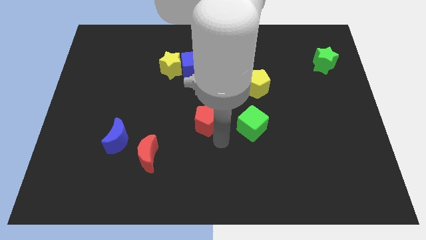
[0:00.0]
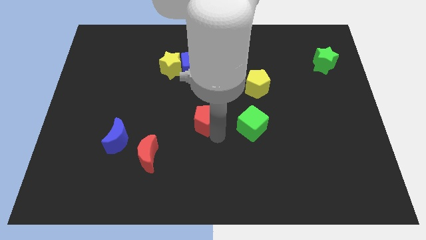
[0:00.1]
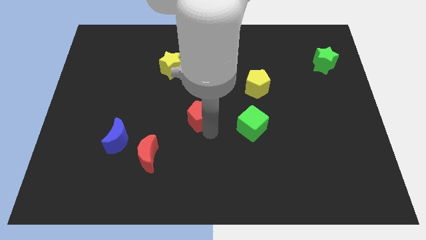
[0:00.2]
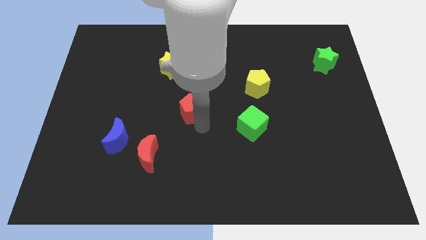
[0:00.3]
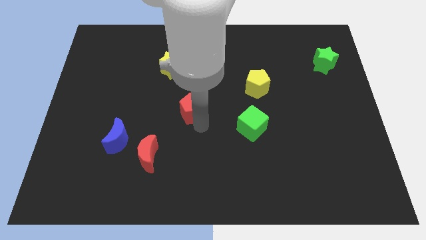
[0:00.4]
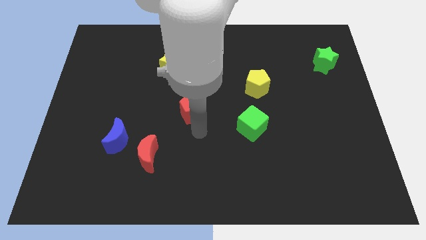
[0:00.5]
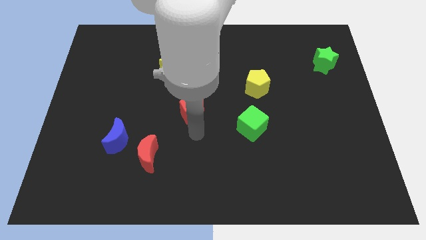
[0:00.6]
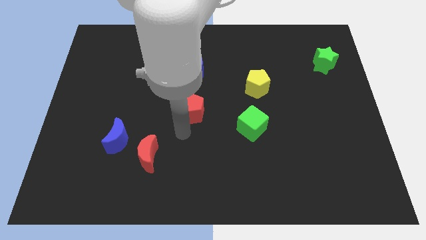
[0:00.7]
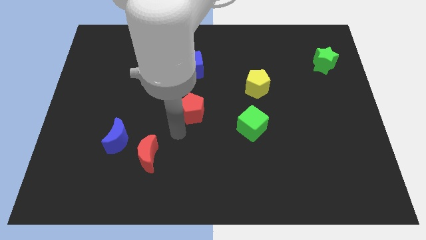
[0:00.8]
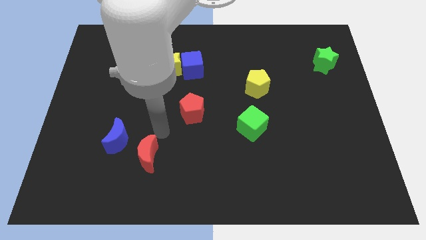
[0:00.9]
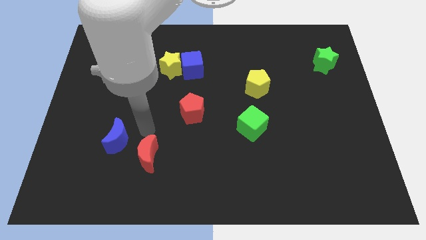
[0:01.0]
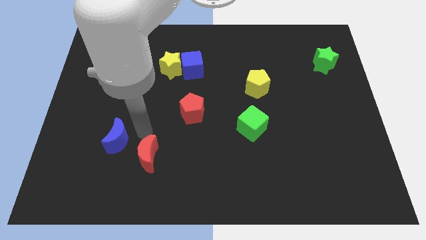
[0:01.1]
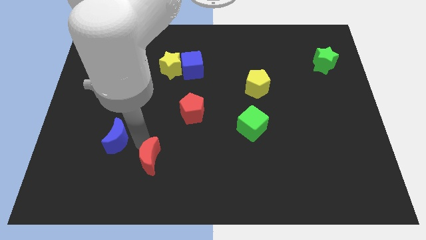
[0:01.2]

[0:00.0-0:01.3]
move your arm towards the red crescent

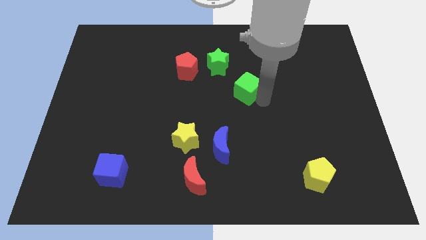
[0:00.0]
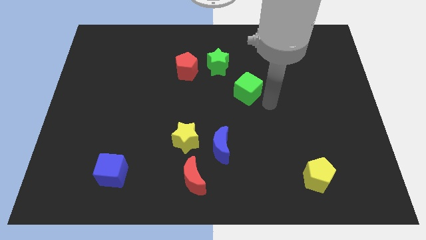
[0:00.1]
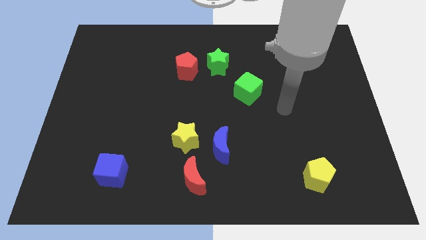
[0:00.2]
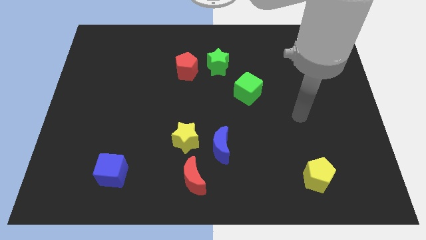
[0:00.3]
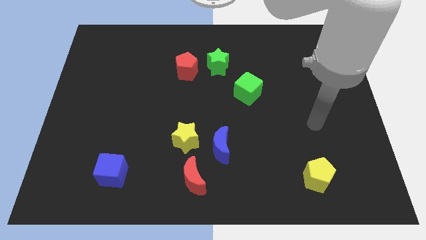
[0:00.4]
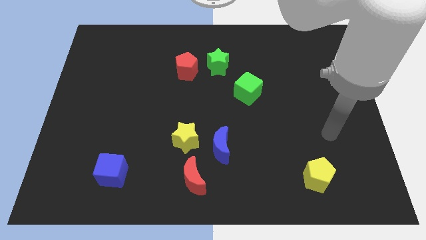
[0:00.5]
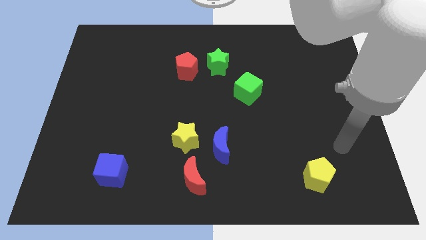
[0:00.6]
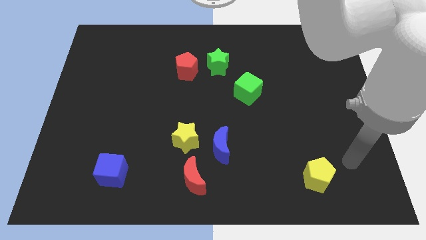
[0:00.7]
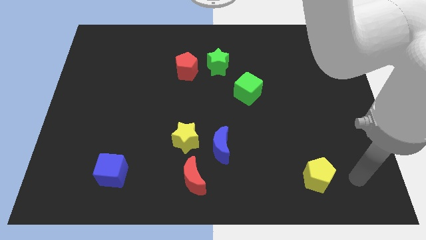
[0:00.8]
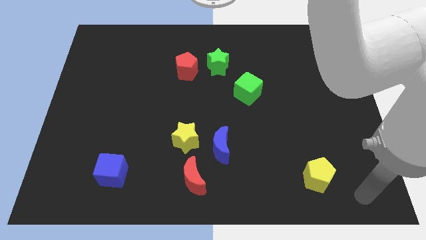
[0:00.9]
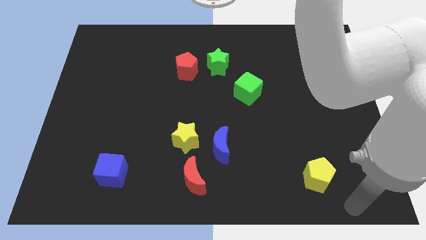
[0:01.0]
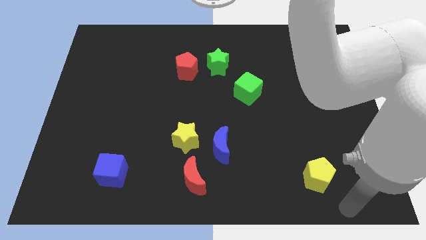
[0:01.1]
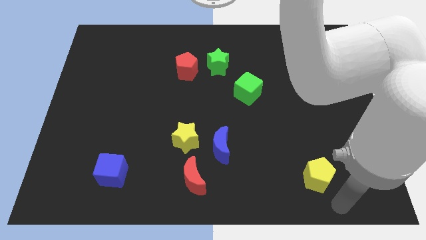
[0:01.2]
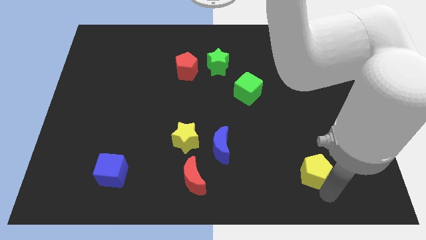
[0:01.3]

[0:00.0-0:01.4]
move your hand away from the green cube

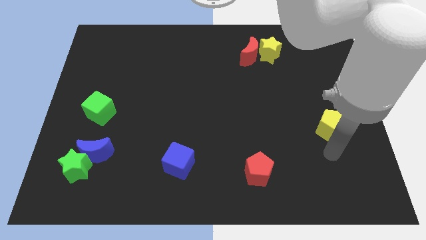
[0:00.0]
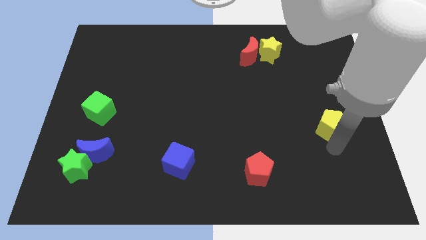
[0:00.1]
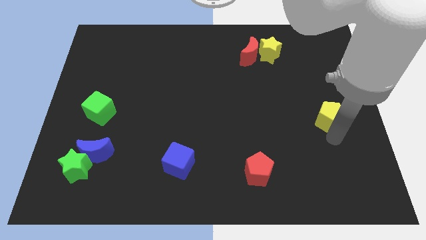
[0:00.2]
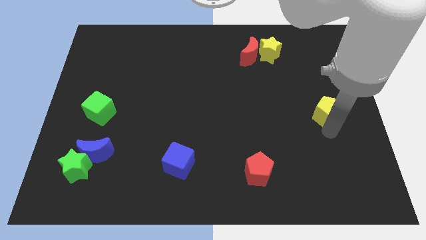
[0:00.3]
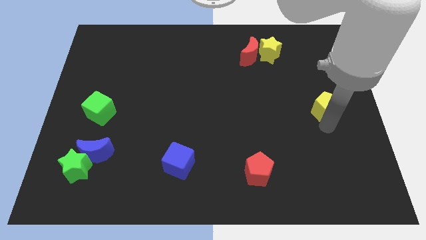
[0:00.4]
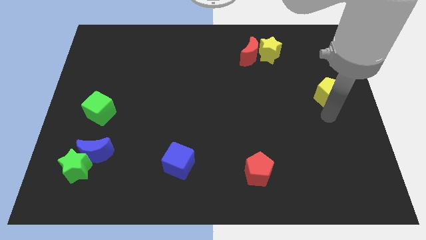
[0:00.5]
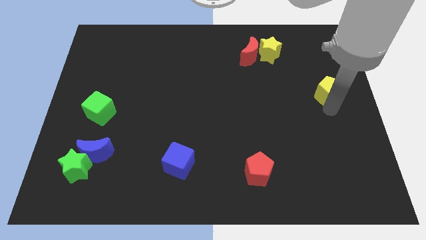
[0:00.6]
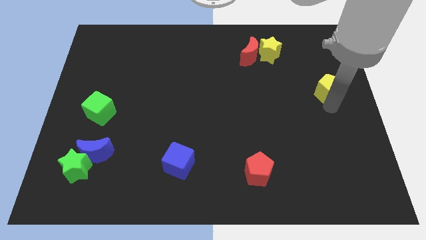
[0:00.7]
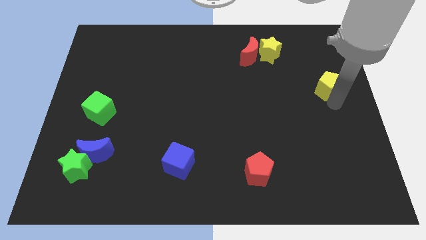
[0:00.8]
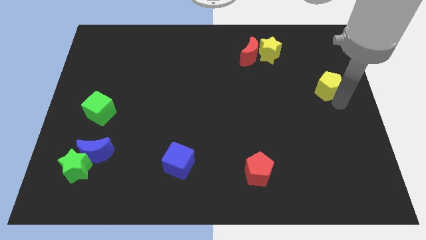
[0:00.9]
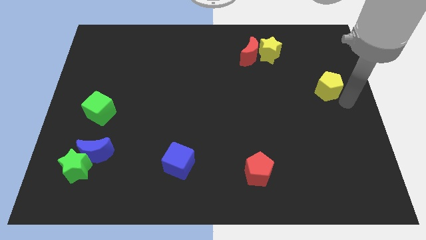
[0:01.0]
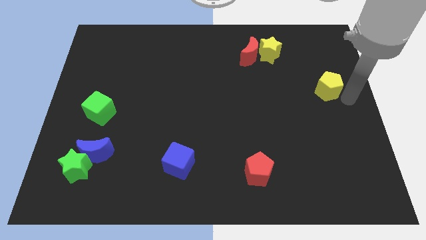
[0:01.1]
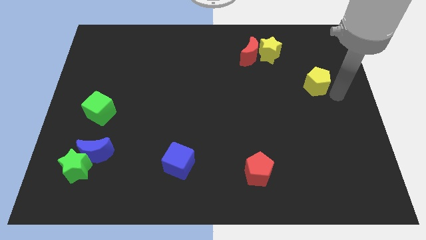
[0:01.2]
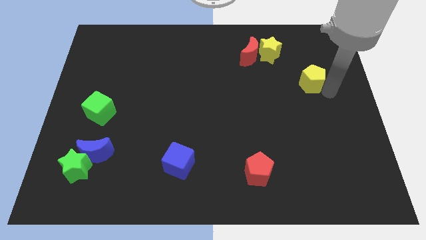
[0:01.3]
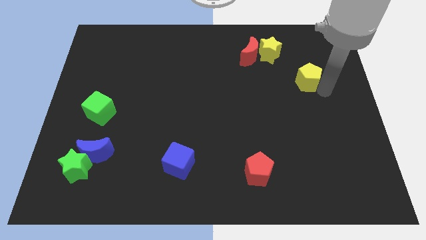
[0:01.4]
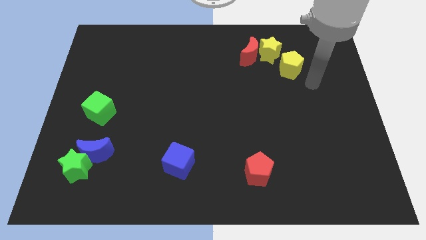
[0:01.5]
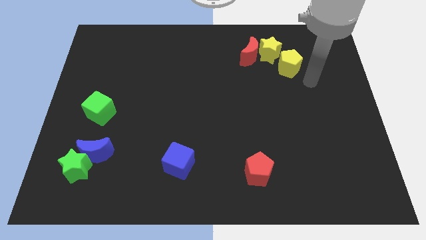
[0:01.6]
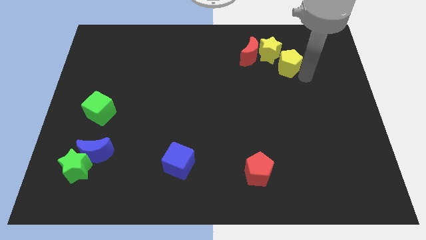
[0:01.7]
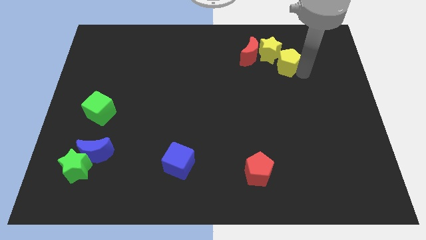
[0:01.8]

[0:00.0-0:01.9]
push the yellow pentagon close to the yellow star

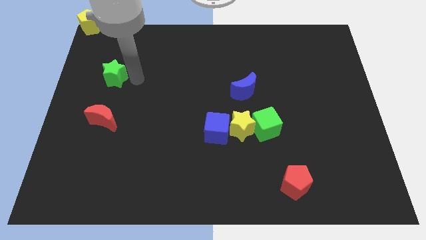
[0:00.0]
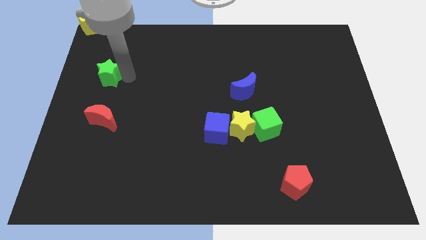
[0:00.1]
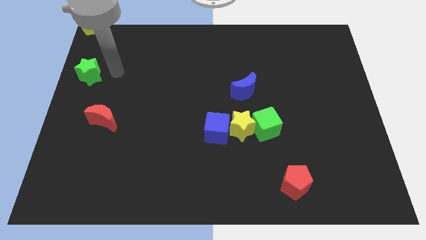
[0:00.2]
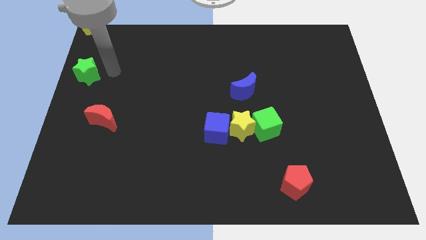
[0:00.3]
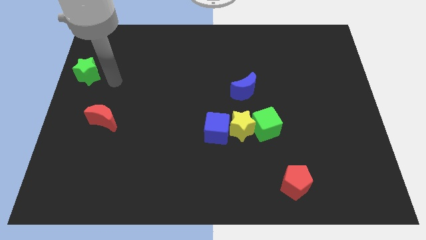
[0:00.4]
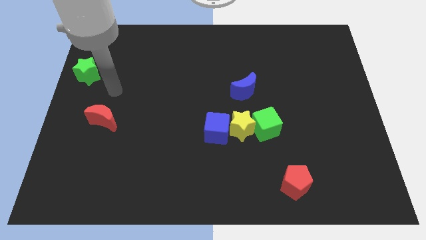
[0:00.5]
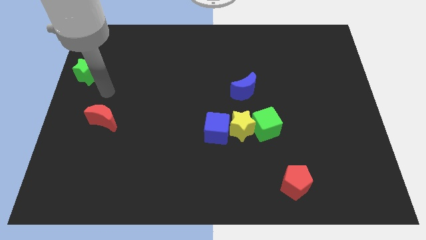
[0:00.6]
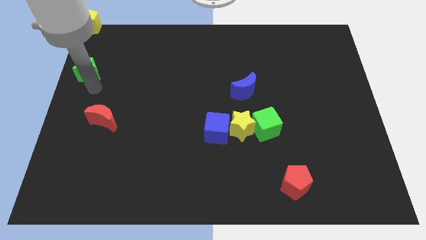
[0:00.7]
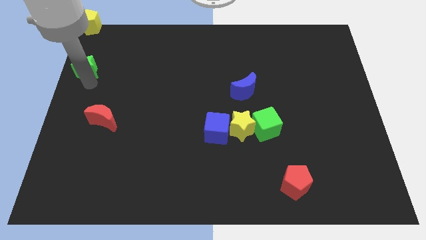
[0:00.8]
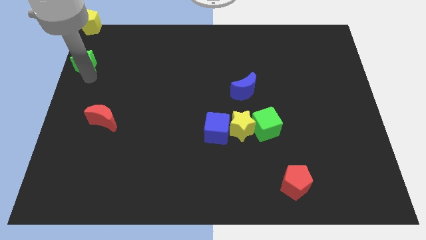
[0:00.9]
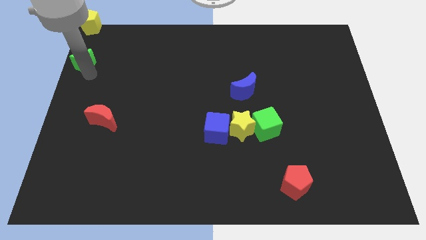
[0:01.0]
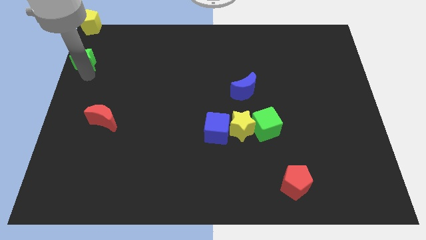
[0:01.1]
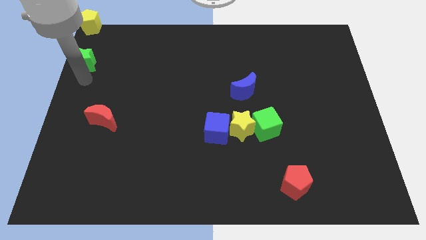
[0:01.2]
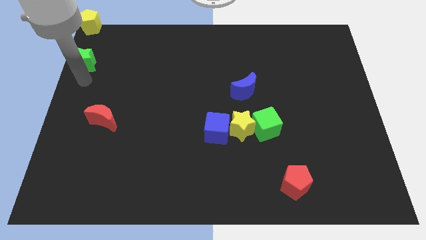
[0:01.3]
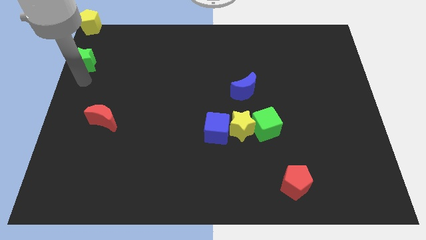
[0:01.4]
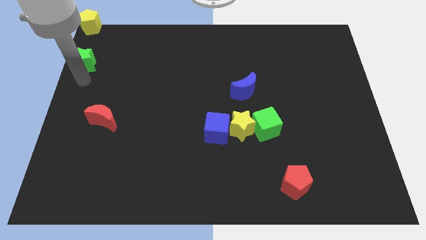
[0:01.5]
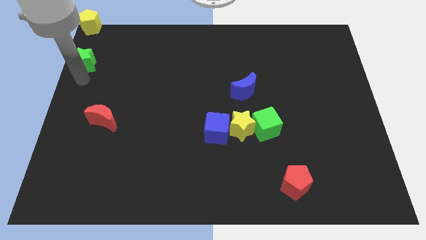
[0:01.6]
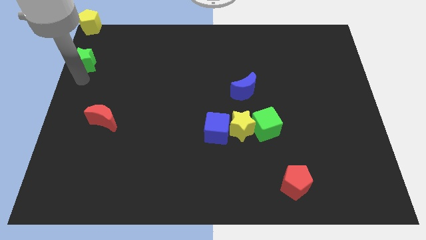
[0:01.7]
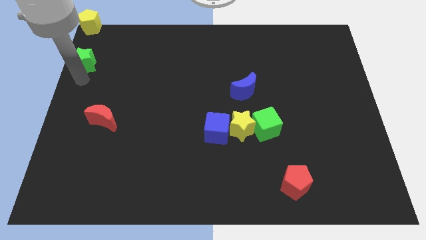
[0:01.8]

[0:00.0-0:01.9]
slide the green star diagonally top left to the red moon

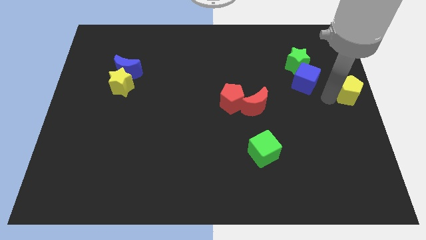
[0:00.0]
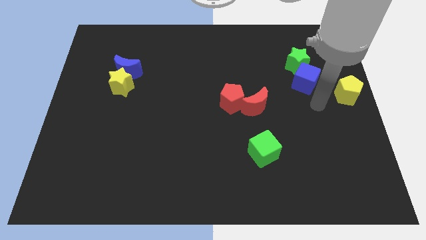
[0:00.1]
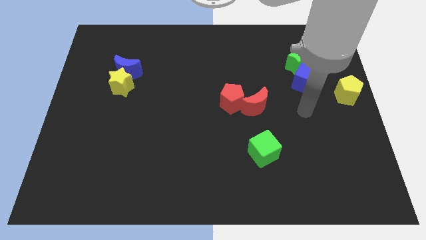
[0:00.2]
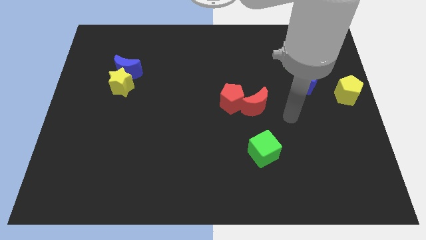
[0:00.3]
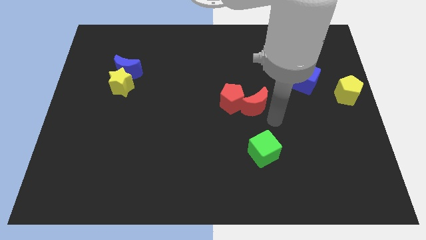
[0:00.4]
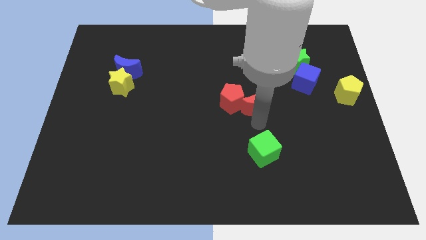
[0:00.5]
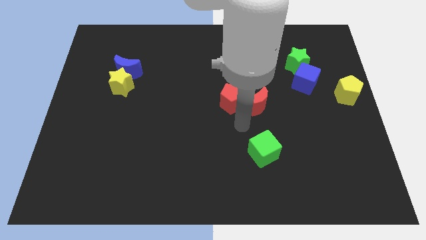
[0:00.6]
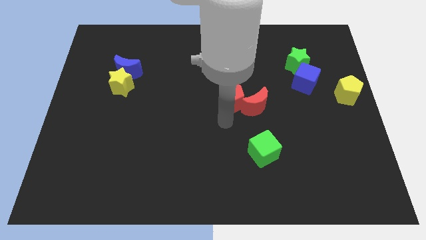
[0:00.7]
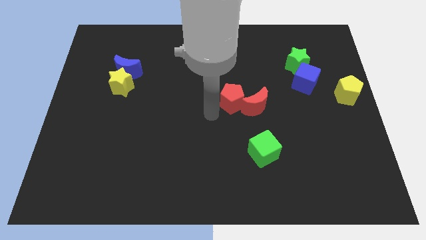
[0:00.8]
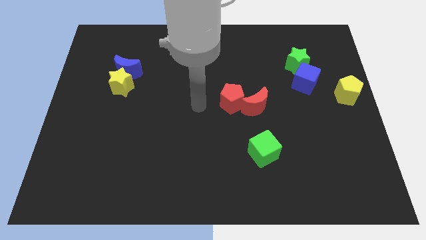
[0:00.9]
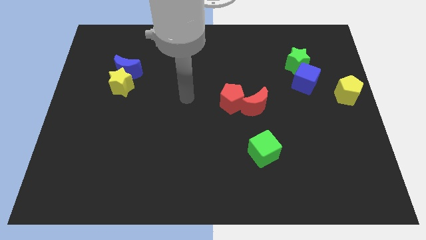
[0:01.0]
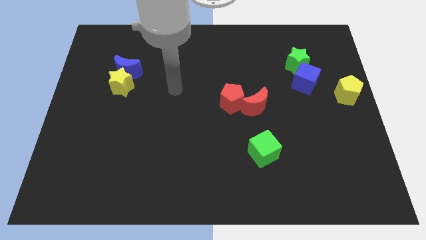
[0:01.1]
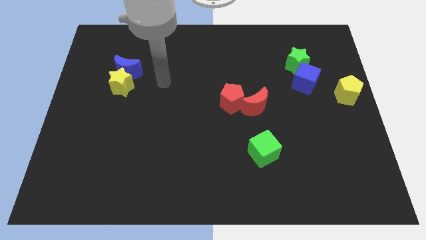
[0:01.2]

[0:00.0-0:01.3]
slide your arm towards the left

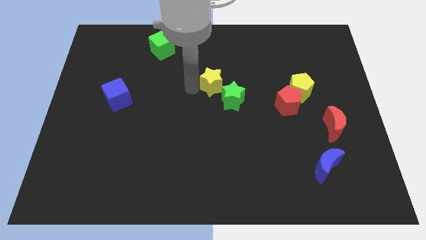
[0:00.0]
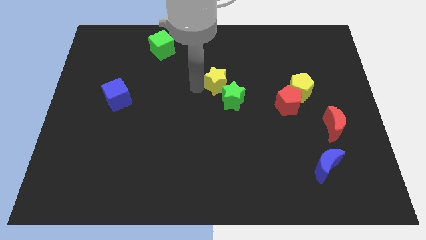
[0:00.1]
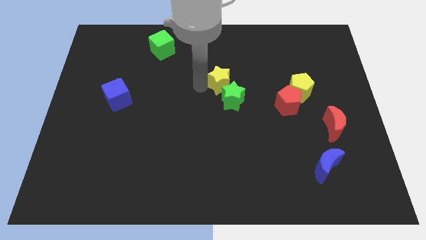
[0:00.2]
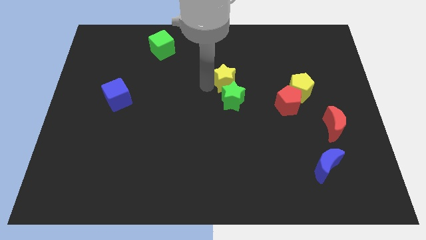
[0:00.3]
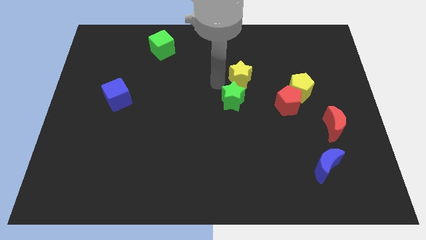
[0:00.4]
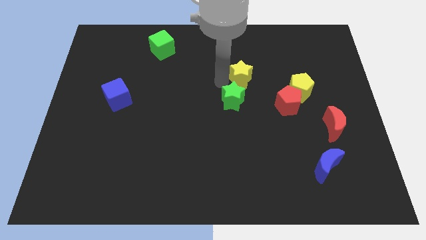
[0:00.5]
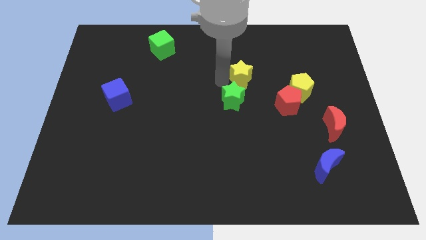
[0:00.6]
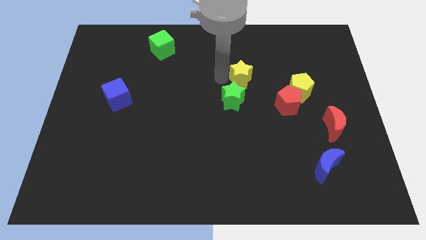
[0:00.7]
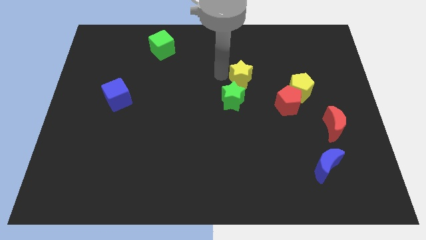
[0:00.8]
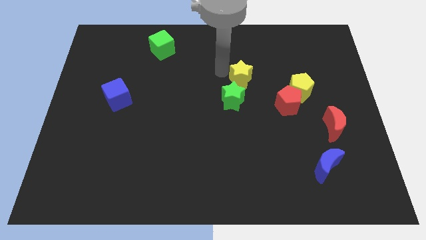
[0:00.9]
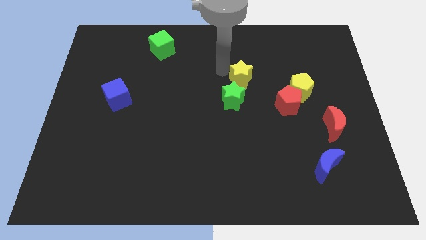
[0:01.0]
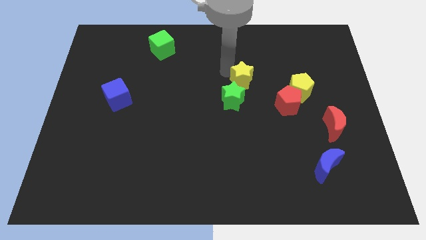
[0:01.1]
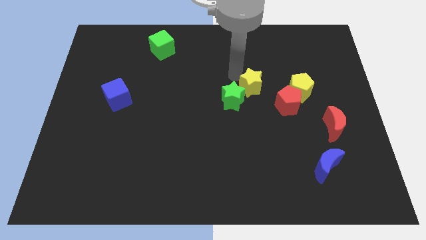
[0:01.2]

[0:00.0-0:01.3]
place the yellow star diagonal to the green star
